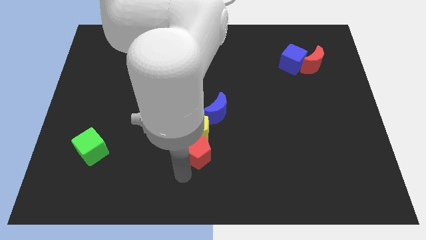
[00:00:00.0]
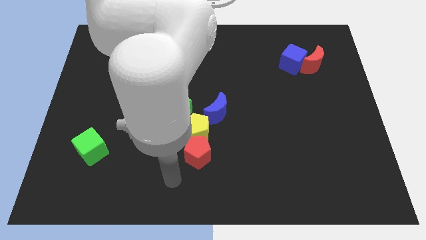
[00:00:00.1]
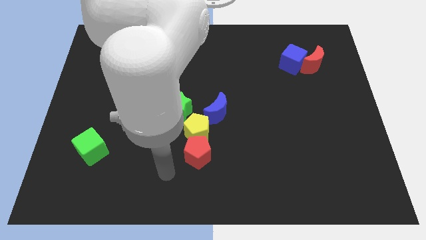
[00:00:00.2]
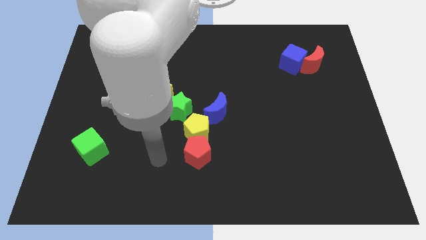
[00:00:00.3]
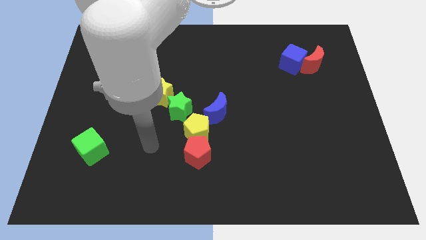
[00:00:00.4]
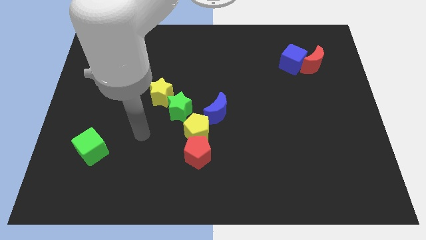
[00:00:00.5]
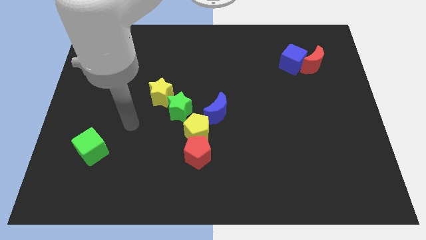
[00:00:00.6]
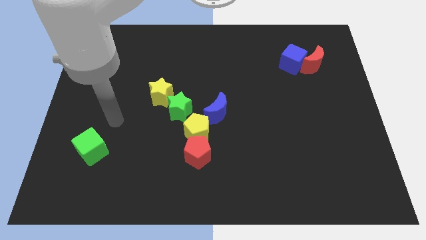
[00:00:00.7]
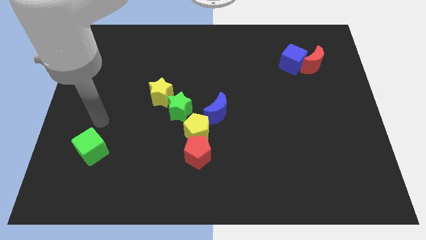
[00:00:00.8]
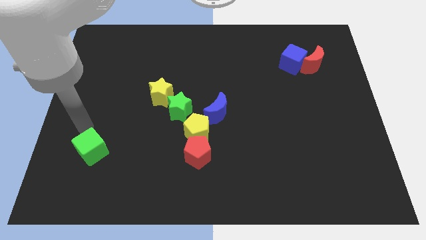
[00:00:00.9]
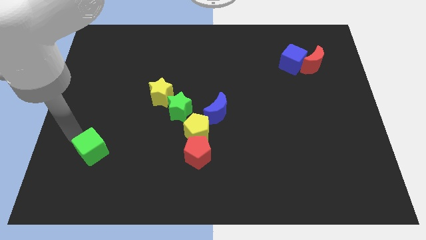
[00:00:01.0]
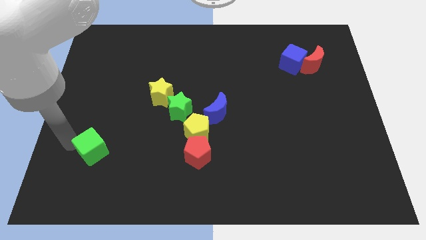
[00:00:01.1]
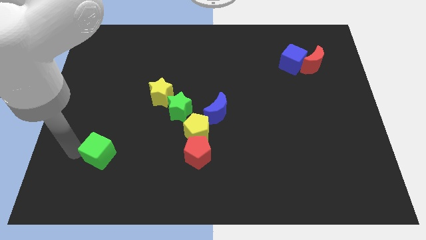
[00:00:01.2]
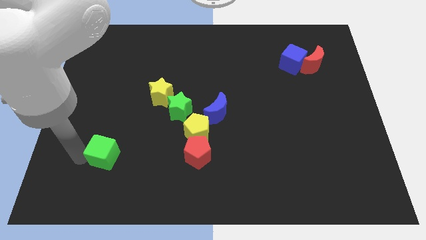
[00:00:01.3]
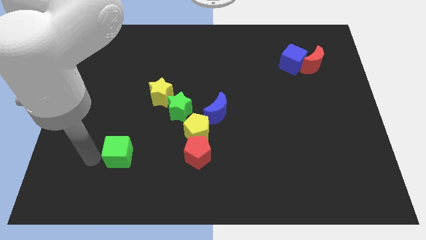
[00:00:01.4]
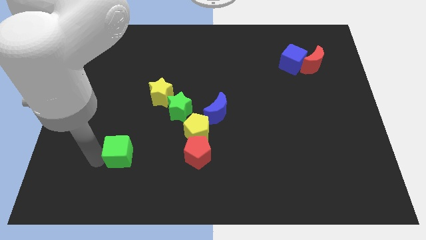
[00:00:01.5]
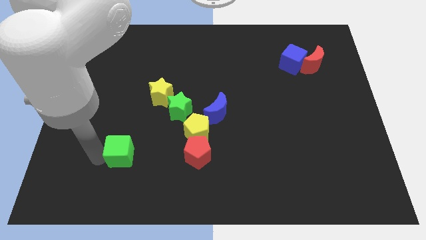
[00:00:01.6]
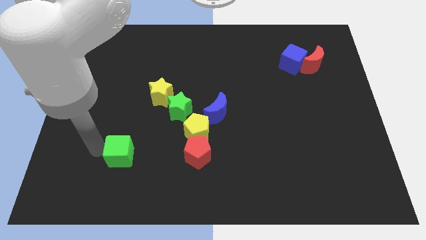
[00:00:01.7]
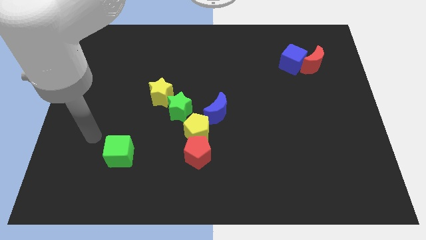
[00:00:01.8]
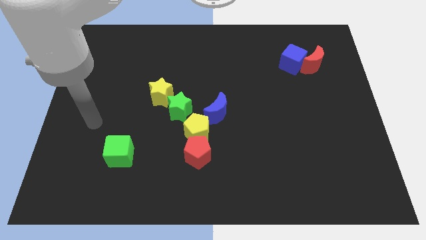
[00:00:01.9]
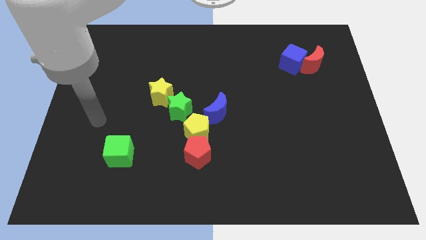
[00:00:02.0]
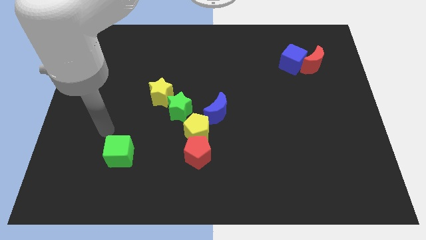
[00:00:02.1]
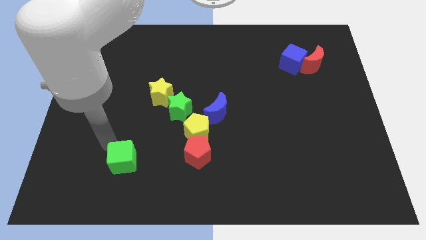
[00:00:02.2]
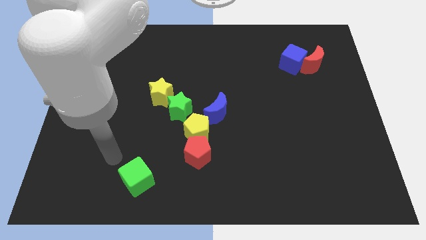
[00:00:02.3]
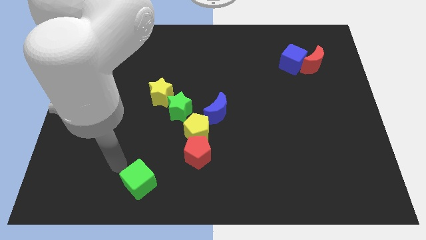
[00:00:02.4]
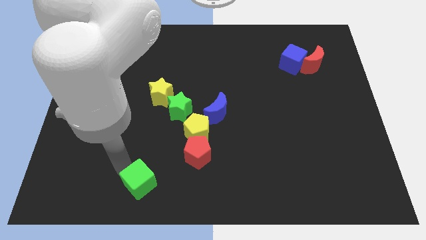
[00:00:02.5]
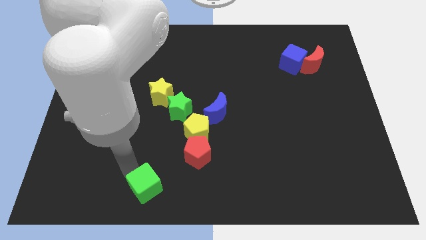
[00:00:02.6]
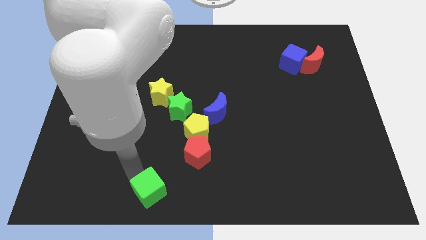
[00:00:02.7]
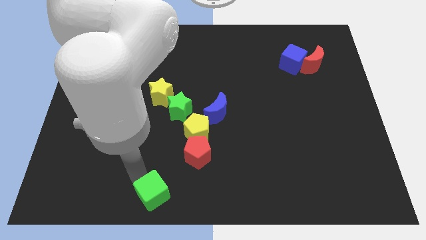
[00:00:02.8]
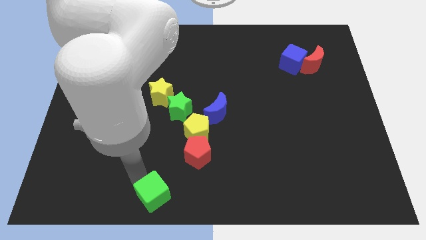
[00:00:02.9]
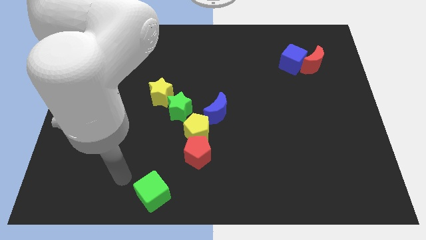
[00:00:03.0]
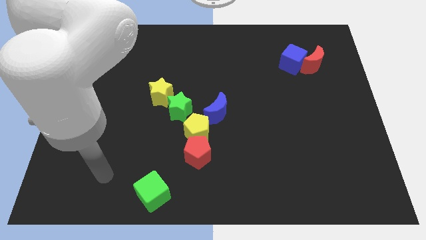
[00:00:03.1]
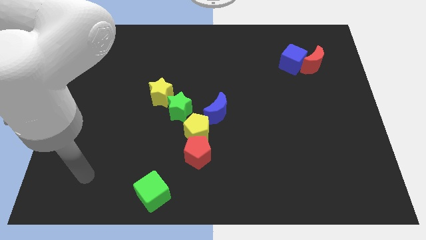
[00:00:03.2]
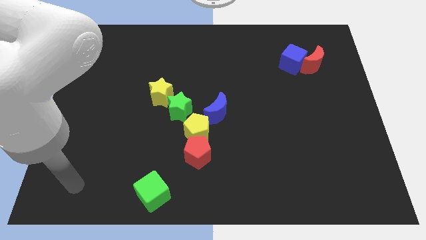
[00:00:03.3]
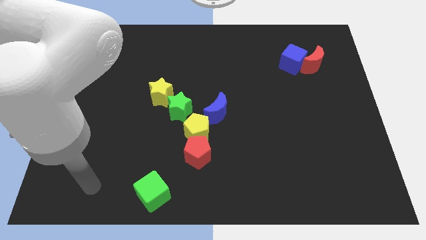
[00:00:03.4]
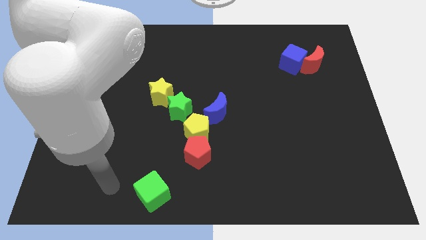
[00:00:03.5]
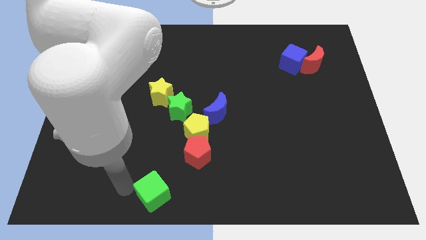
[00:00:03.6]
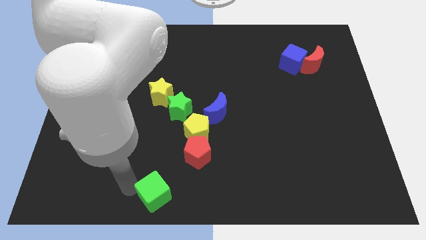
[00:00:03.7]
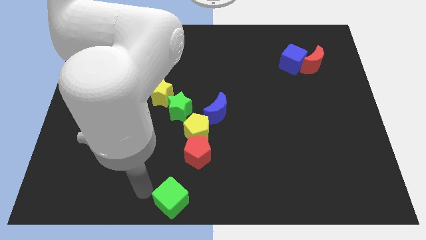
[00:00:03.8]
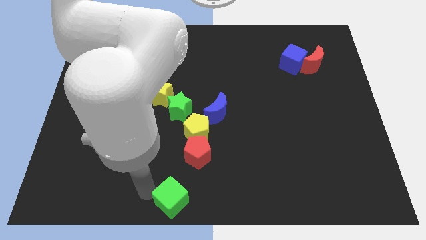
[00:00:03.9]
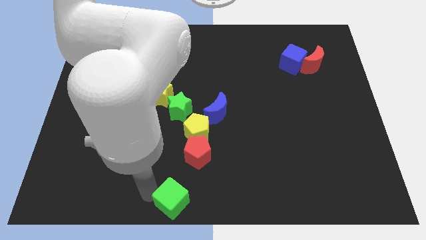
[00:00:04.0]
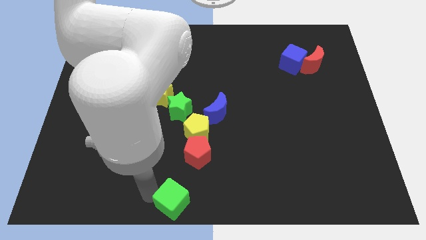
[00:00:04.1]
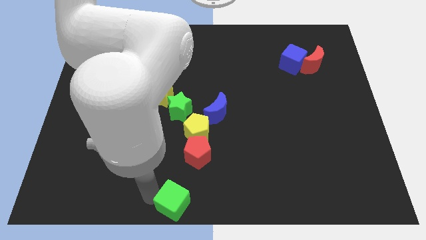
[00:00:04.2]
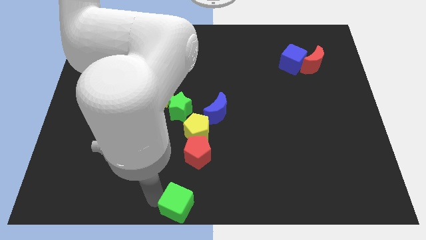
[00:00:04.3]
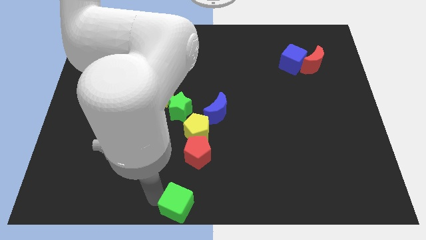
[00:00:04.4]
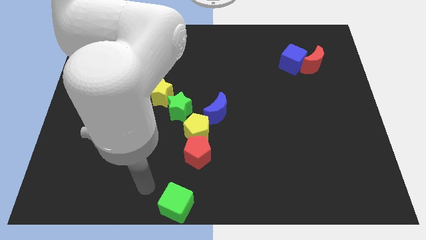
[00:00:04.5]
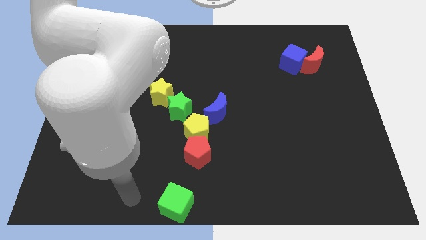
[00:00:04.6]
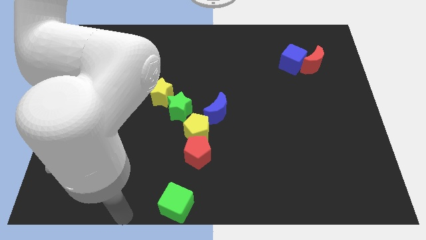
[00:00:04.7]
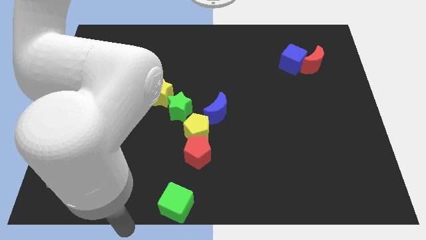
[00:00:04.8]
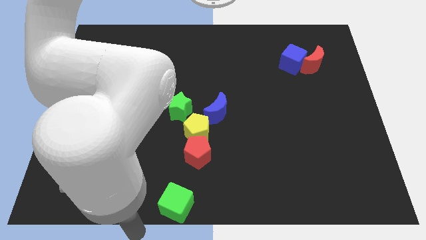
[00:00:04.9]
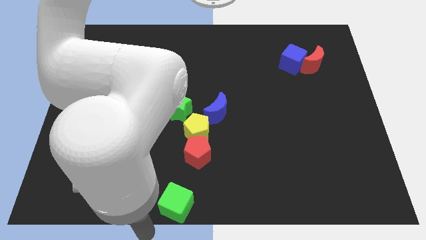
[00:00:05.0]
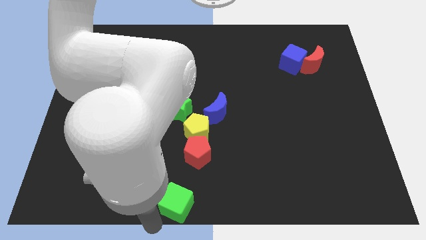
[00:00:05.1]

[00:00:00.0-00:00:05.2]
place the green cube below the red pentagon

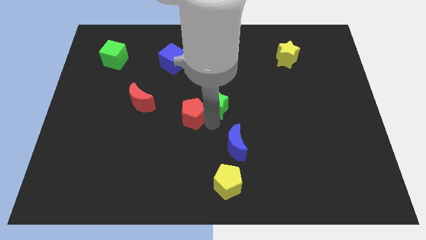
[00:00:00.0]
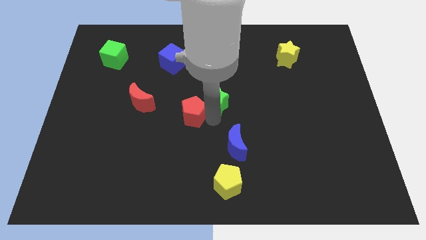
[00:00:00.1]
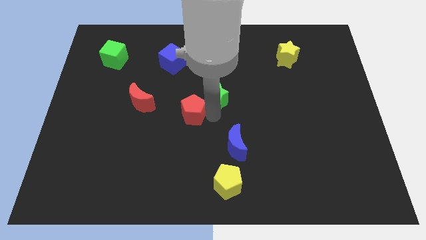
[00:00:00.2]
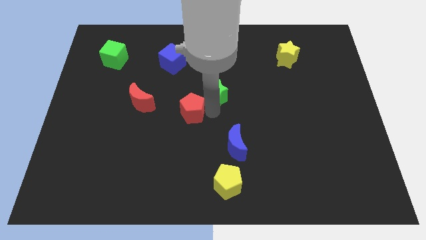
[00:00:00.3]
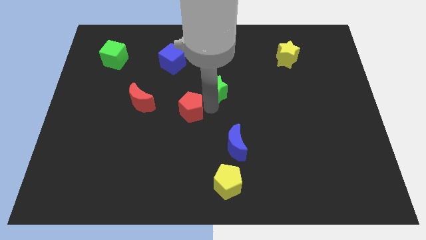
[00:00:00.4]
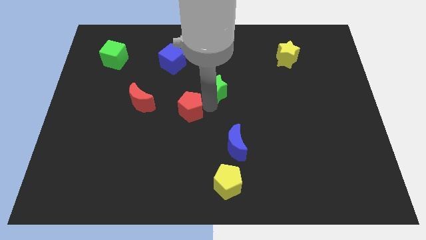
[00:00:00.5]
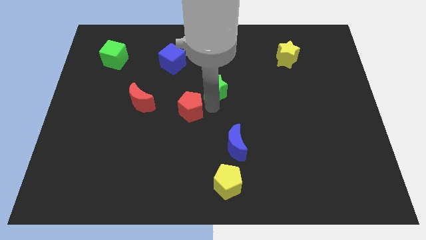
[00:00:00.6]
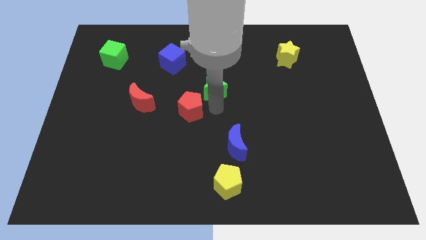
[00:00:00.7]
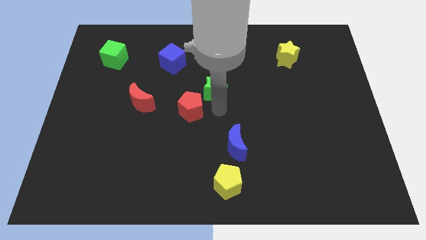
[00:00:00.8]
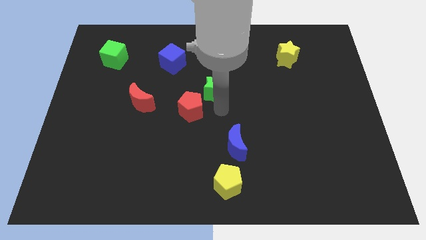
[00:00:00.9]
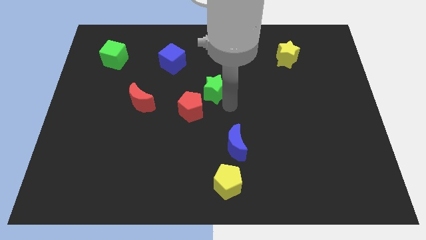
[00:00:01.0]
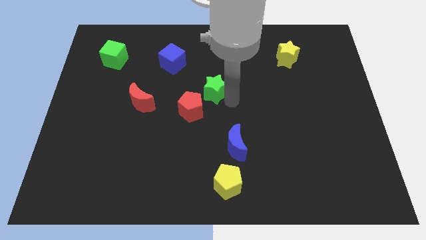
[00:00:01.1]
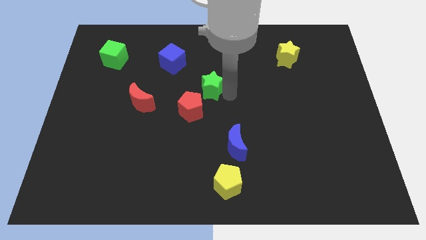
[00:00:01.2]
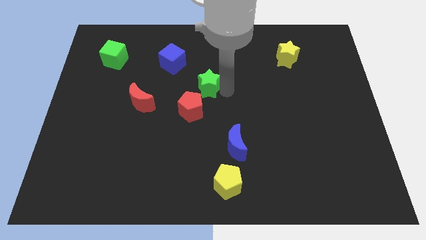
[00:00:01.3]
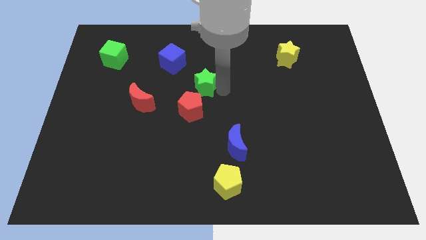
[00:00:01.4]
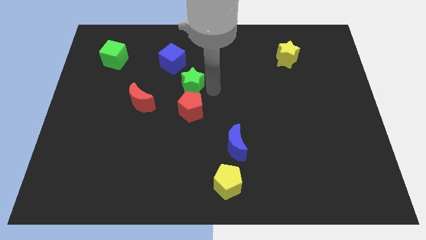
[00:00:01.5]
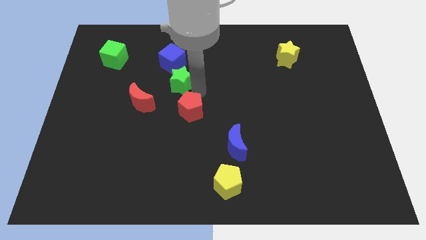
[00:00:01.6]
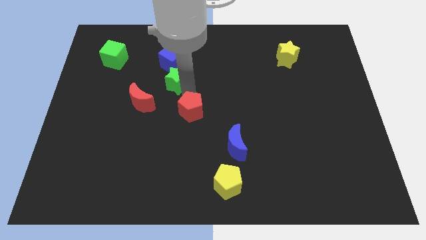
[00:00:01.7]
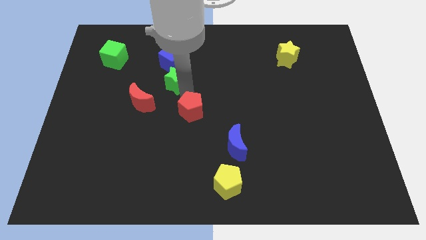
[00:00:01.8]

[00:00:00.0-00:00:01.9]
put the green star between the blue cube and red pentagon

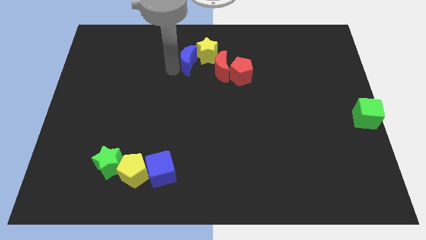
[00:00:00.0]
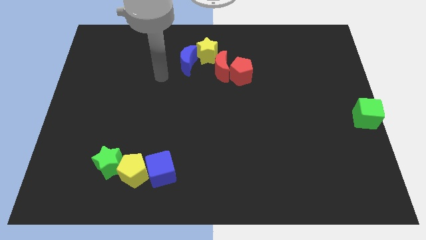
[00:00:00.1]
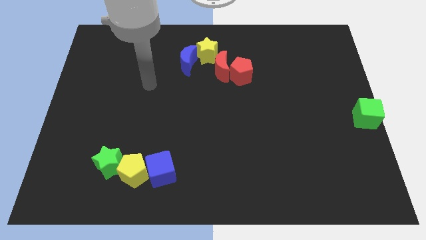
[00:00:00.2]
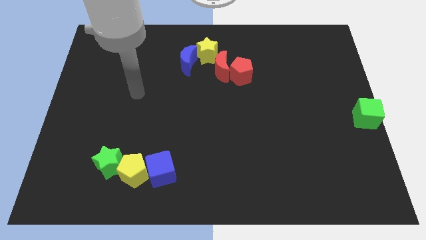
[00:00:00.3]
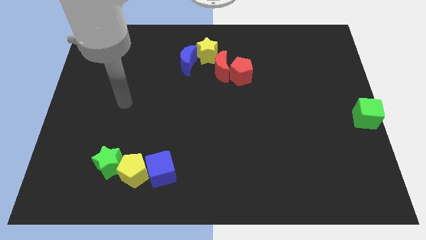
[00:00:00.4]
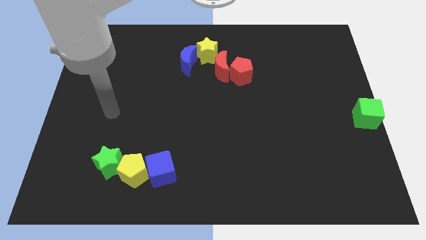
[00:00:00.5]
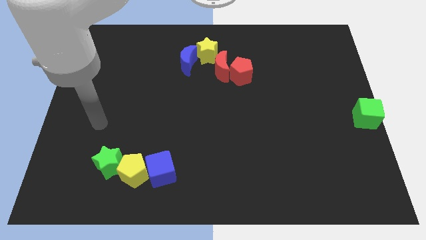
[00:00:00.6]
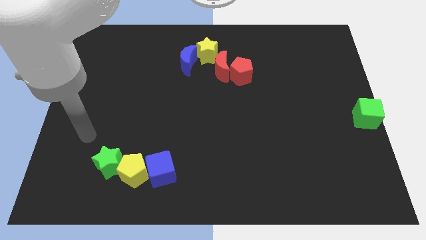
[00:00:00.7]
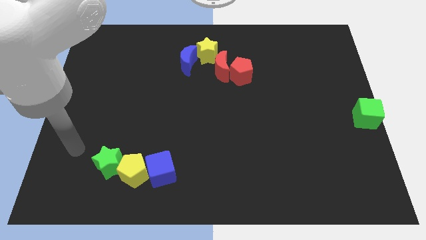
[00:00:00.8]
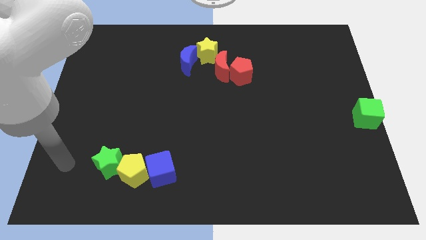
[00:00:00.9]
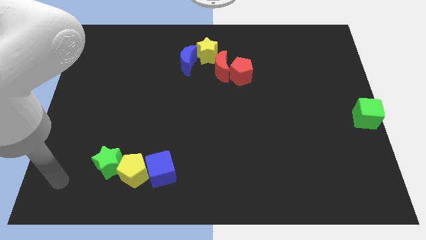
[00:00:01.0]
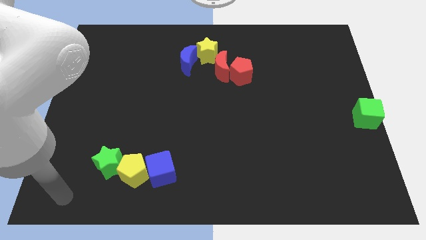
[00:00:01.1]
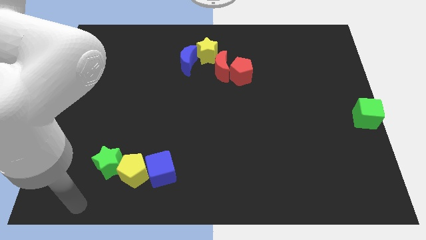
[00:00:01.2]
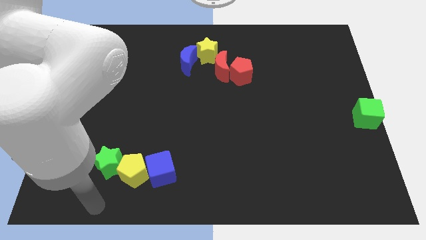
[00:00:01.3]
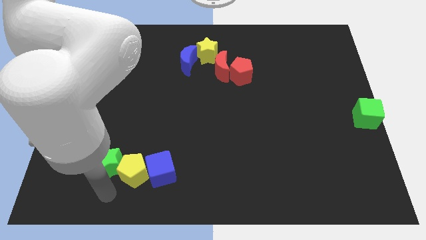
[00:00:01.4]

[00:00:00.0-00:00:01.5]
point the arm below the green star

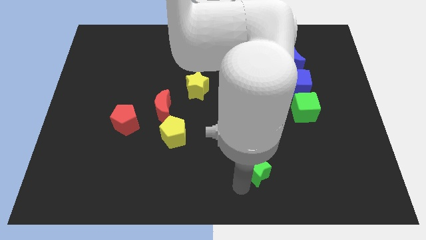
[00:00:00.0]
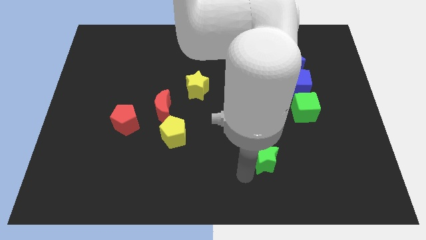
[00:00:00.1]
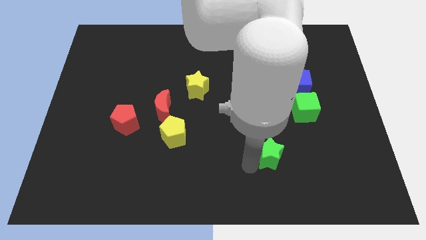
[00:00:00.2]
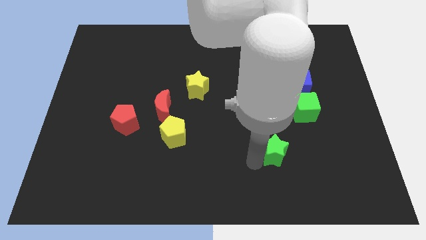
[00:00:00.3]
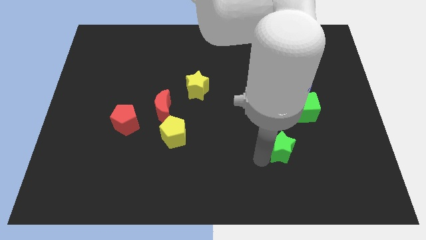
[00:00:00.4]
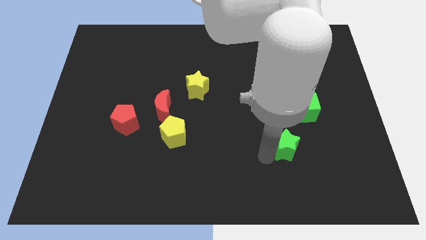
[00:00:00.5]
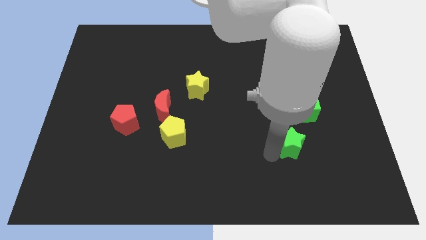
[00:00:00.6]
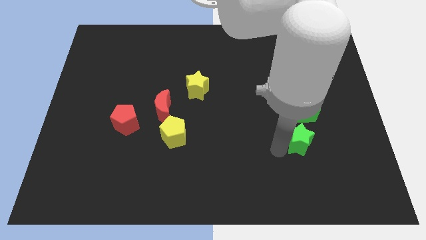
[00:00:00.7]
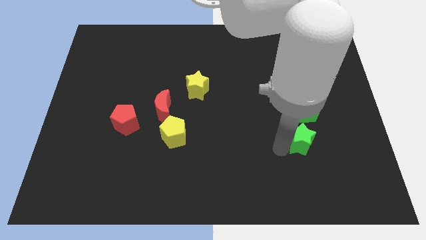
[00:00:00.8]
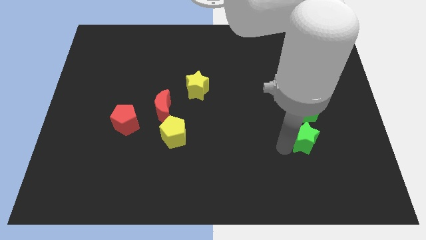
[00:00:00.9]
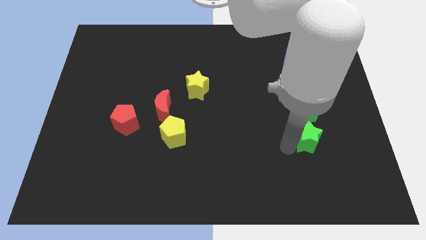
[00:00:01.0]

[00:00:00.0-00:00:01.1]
push the green star to the bottom side of the green cube
